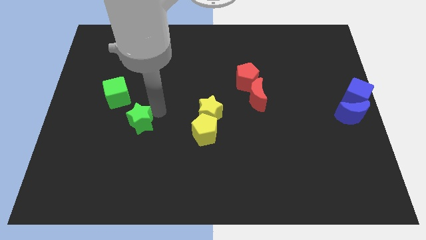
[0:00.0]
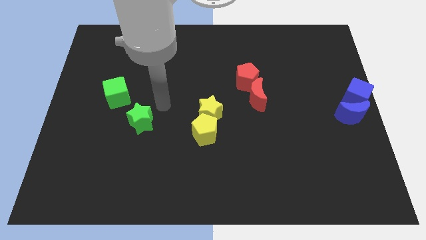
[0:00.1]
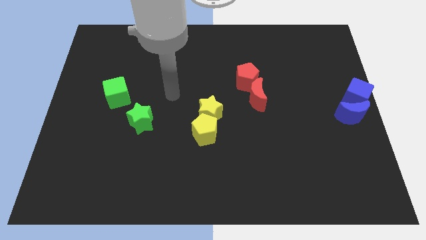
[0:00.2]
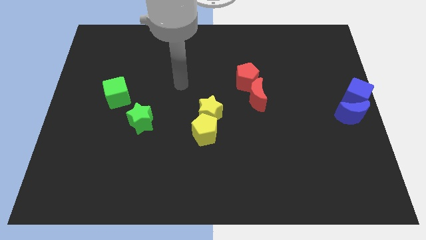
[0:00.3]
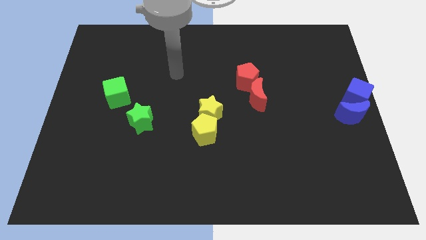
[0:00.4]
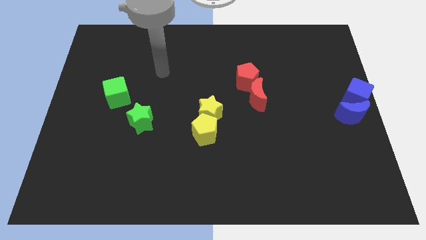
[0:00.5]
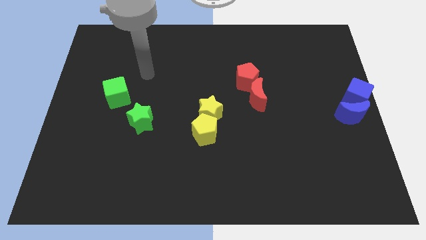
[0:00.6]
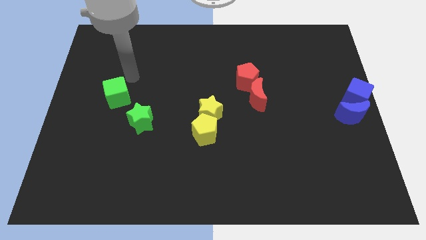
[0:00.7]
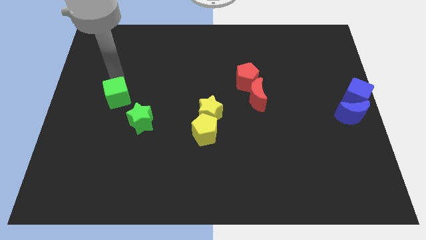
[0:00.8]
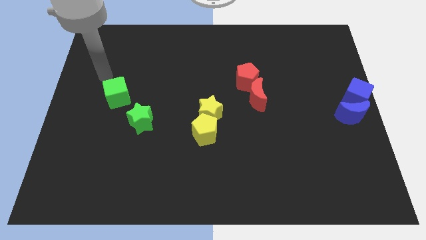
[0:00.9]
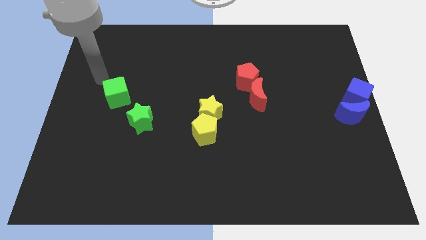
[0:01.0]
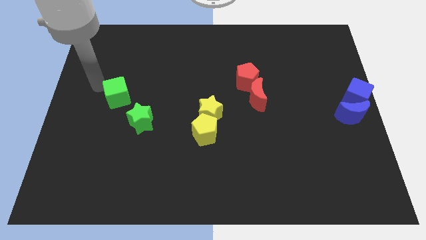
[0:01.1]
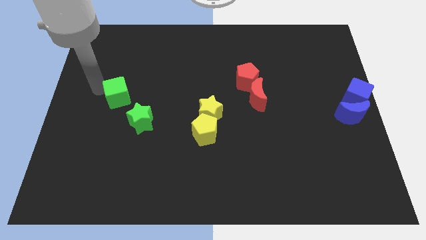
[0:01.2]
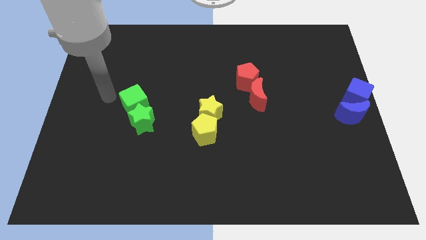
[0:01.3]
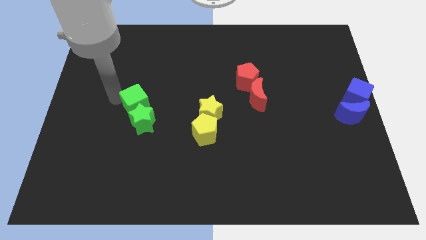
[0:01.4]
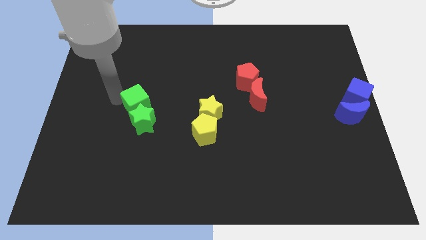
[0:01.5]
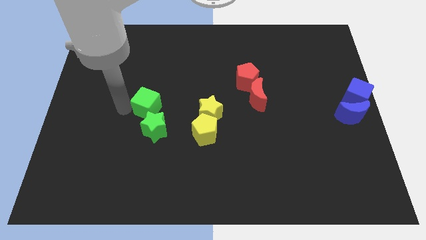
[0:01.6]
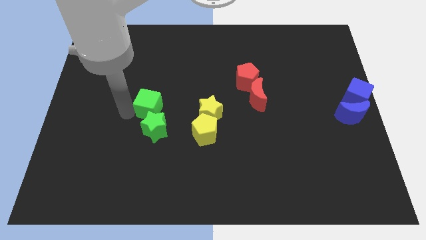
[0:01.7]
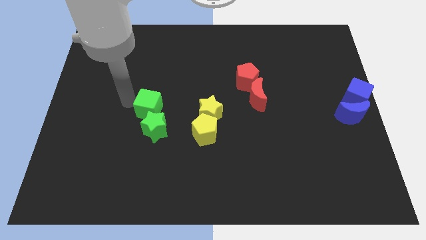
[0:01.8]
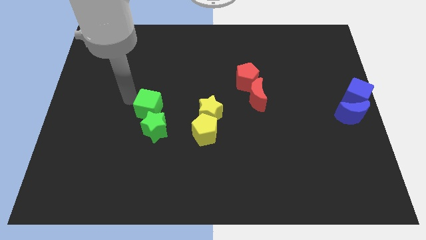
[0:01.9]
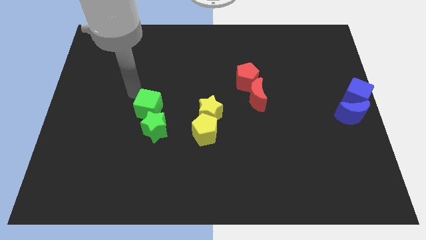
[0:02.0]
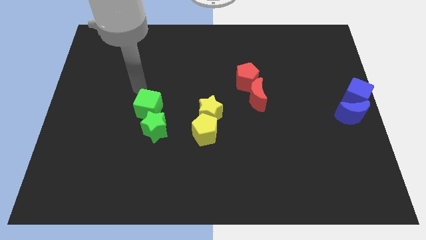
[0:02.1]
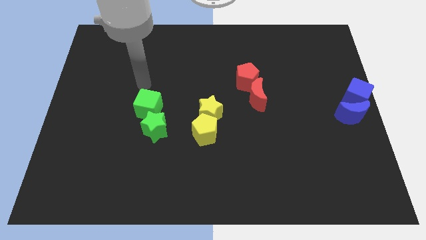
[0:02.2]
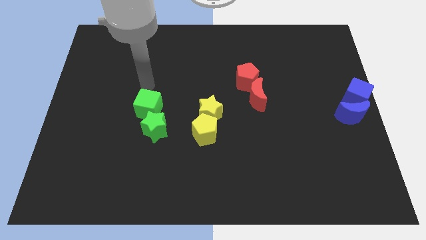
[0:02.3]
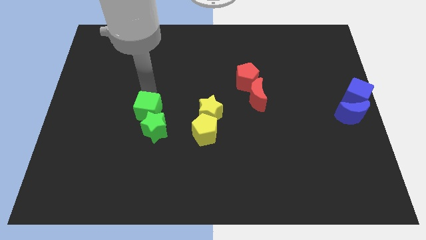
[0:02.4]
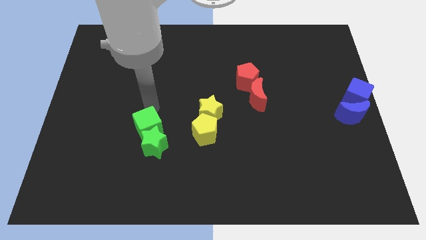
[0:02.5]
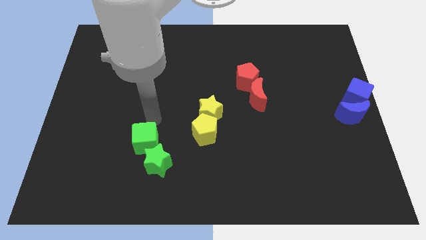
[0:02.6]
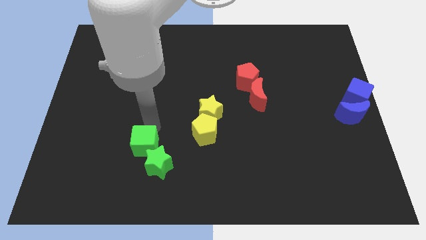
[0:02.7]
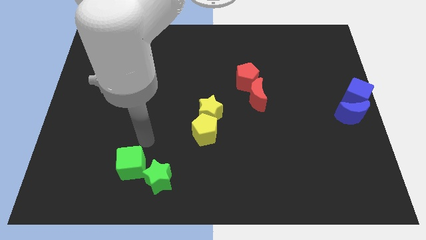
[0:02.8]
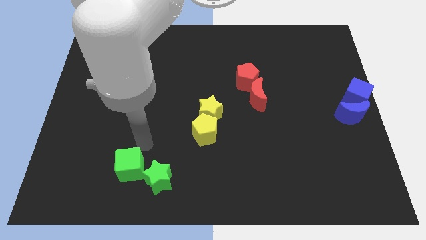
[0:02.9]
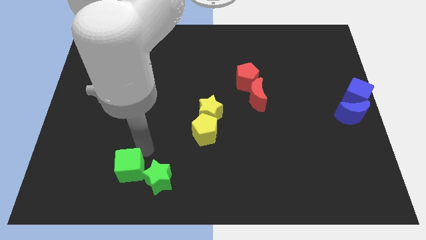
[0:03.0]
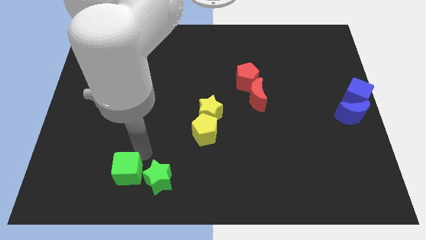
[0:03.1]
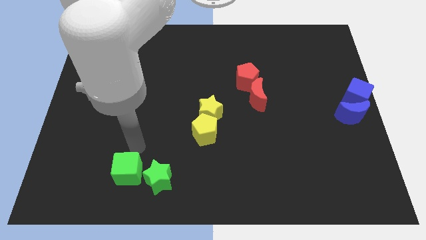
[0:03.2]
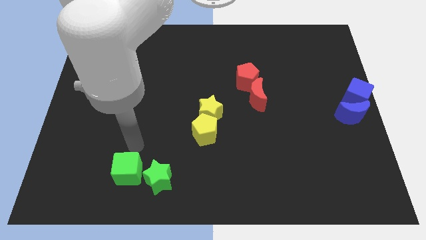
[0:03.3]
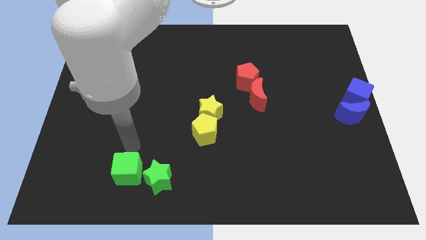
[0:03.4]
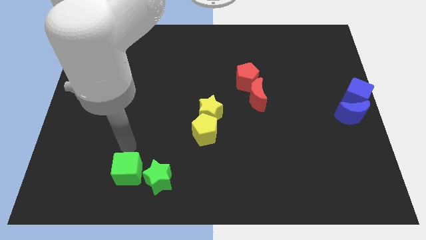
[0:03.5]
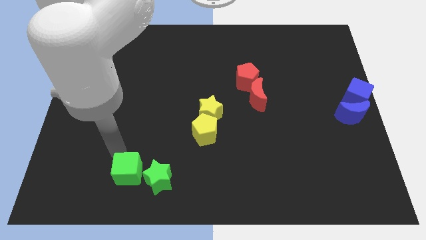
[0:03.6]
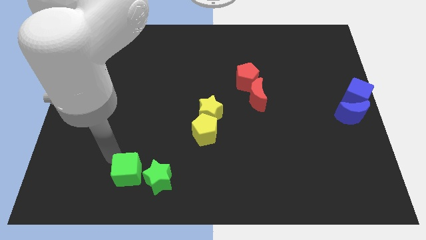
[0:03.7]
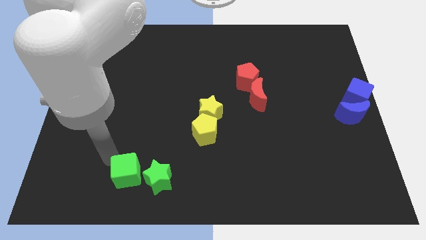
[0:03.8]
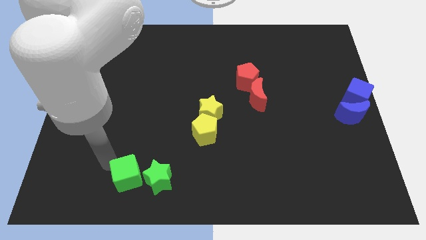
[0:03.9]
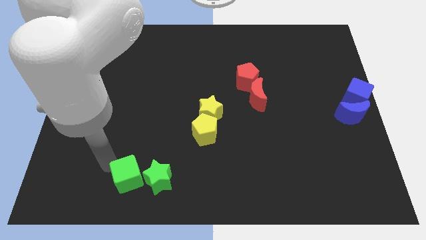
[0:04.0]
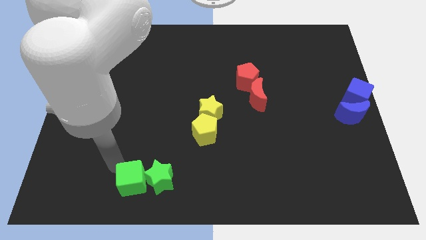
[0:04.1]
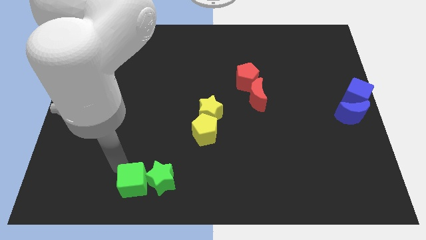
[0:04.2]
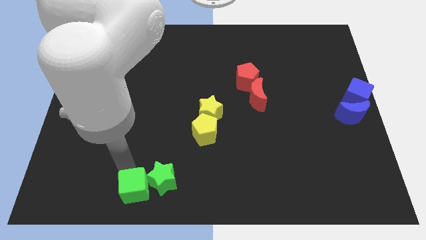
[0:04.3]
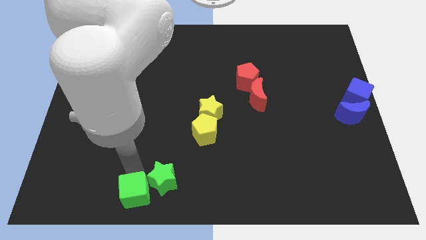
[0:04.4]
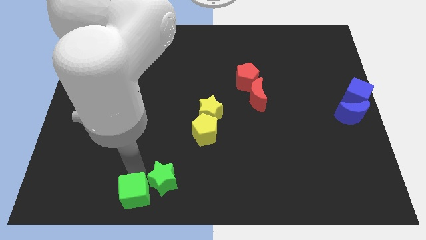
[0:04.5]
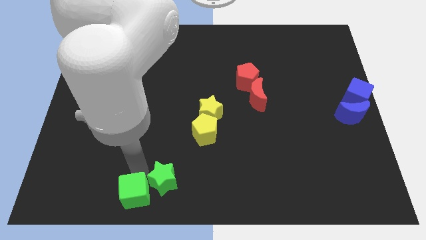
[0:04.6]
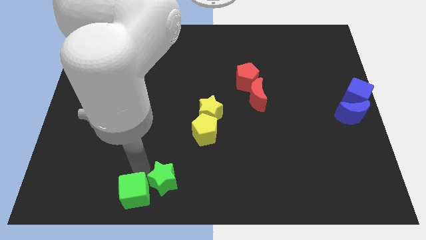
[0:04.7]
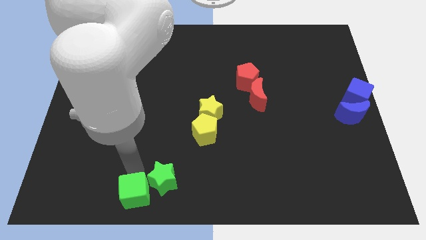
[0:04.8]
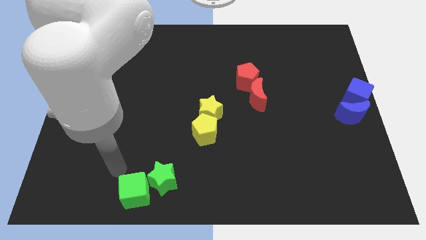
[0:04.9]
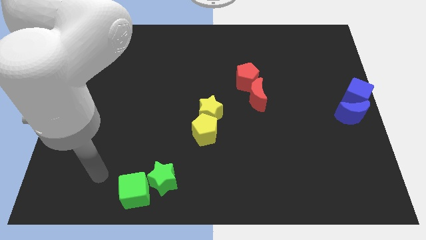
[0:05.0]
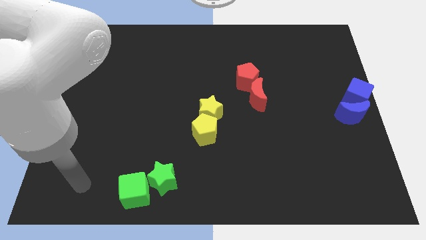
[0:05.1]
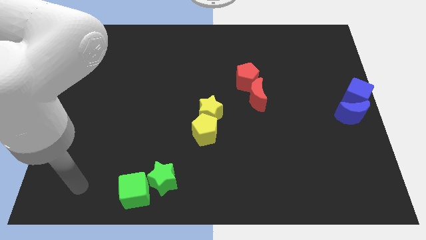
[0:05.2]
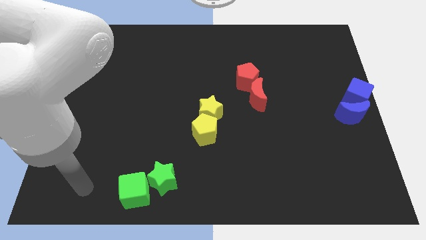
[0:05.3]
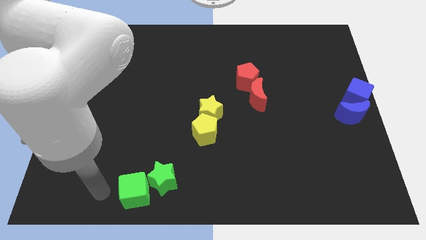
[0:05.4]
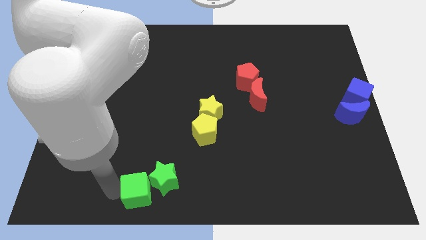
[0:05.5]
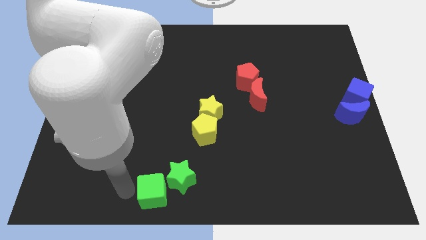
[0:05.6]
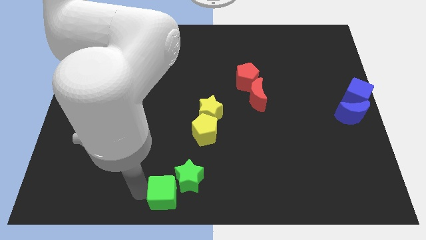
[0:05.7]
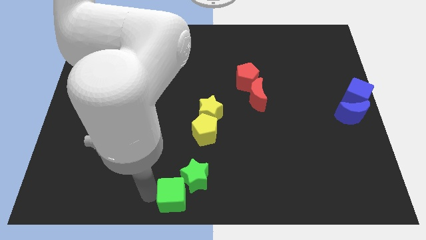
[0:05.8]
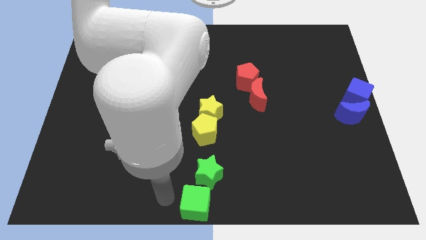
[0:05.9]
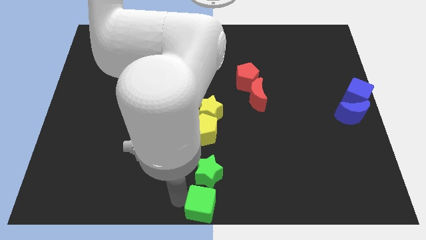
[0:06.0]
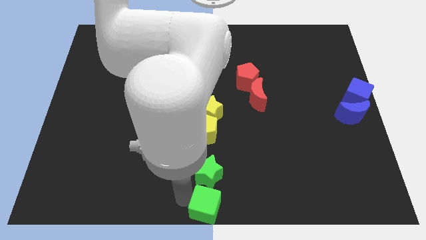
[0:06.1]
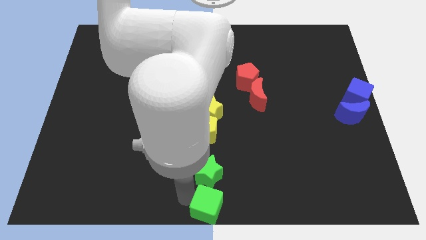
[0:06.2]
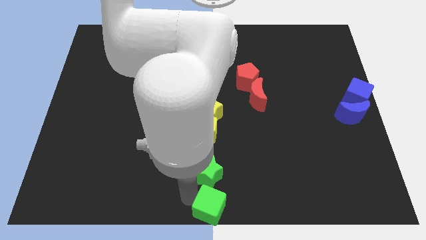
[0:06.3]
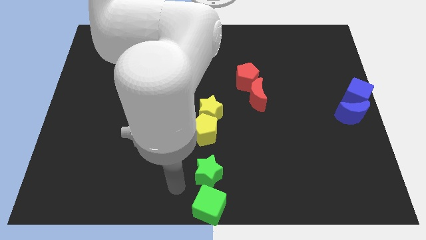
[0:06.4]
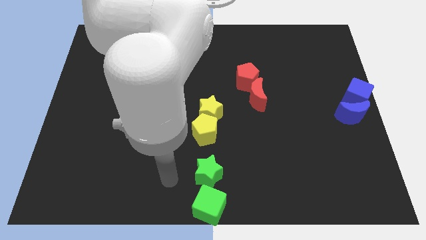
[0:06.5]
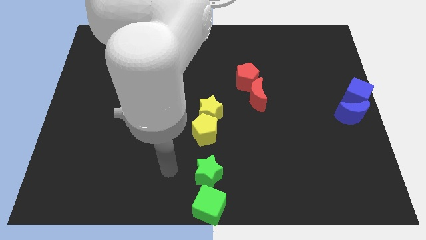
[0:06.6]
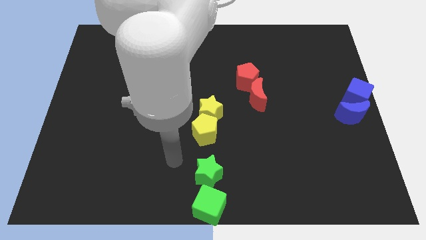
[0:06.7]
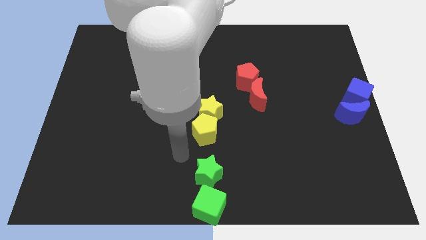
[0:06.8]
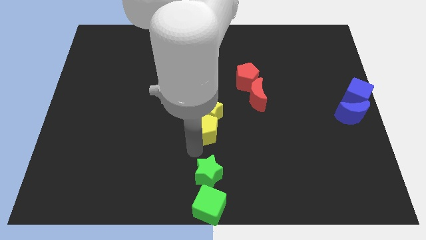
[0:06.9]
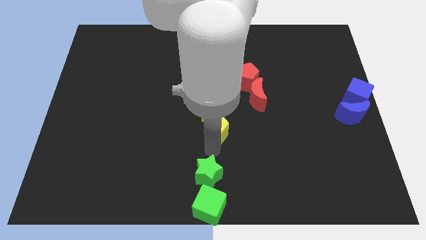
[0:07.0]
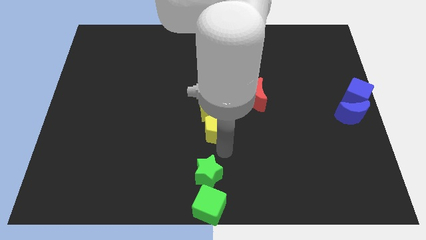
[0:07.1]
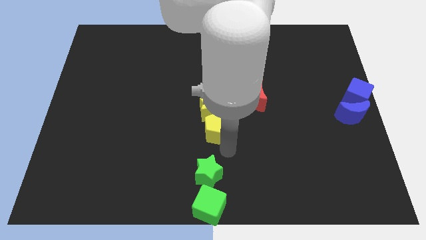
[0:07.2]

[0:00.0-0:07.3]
move the green star and the green cube towards the bottom center of the board

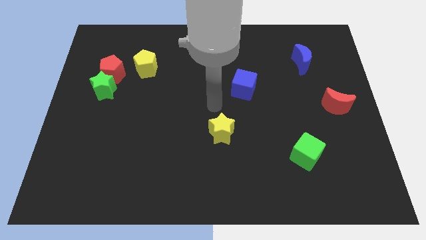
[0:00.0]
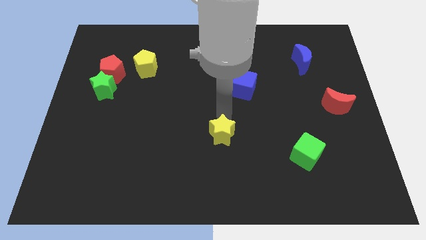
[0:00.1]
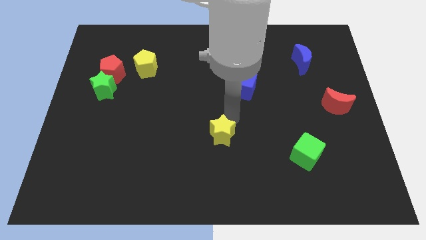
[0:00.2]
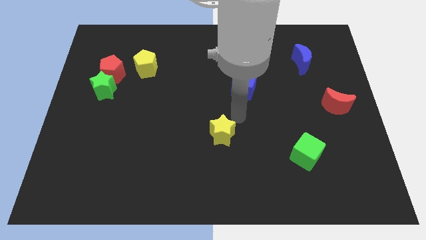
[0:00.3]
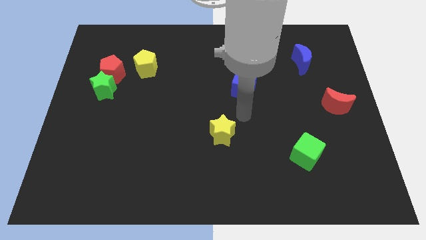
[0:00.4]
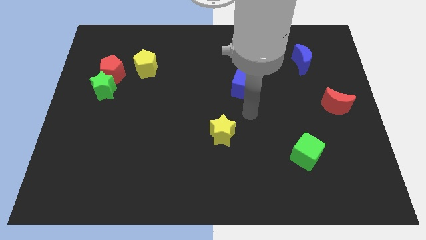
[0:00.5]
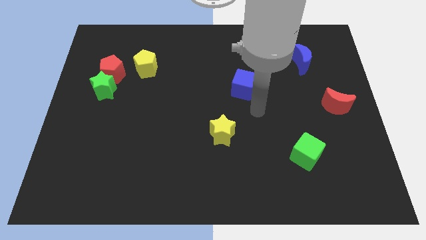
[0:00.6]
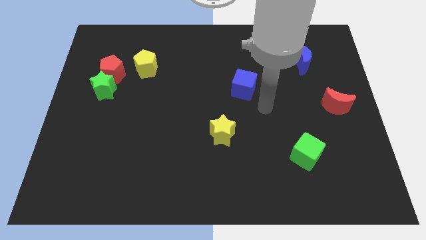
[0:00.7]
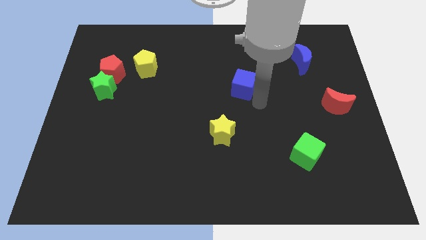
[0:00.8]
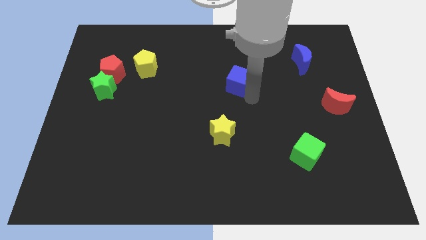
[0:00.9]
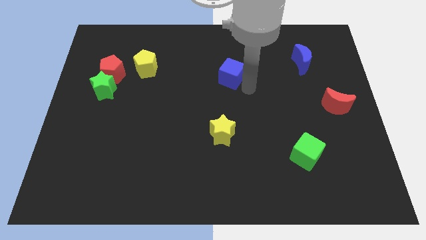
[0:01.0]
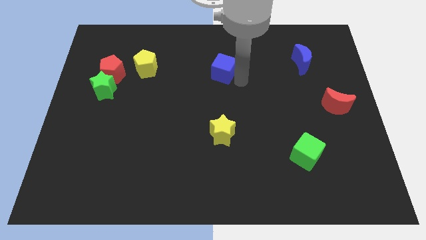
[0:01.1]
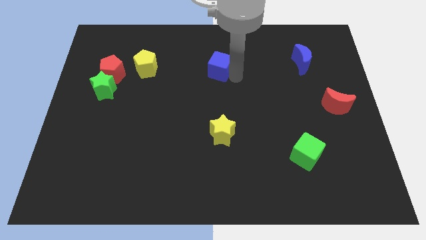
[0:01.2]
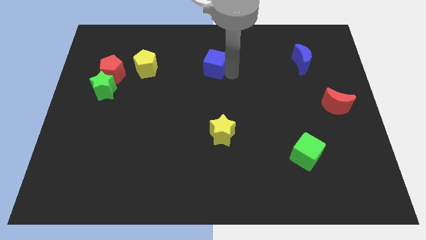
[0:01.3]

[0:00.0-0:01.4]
push blue cube above yellow star

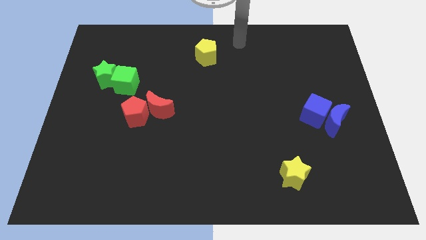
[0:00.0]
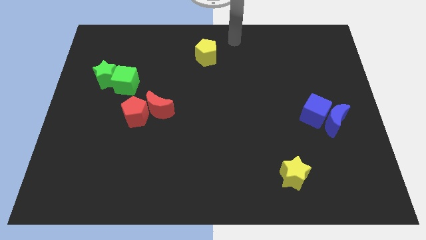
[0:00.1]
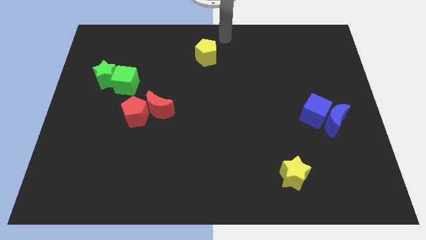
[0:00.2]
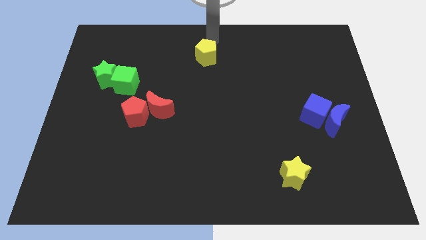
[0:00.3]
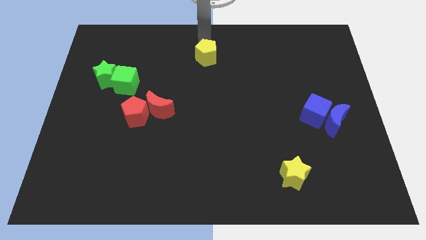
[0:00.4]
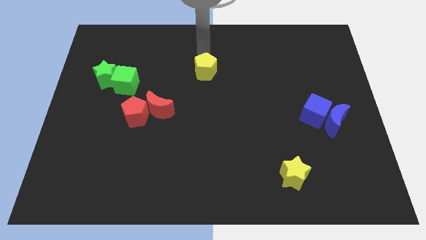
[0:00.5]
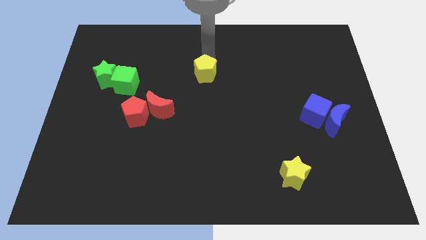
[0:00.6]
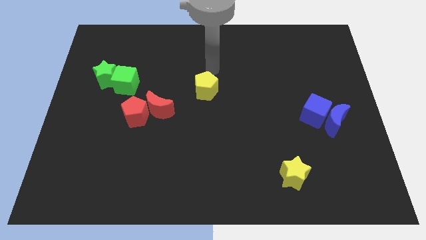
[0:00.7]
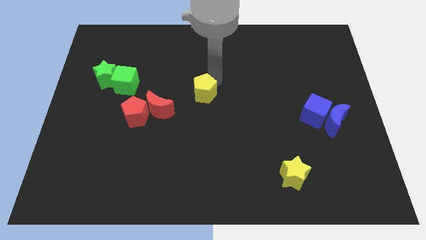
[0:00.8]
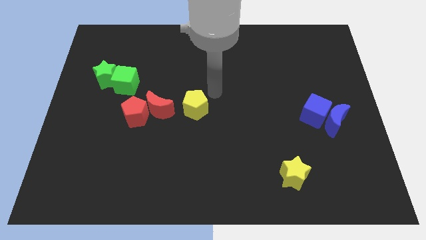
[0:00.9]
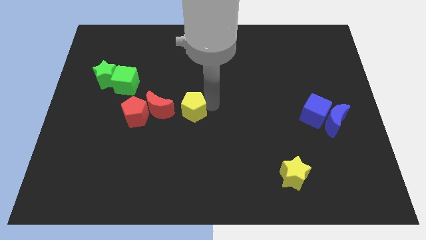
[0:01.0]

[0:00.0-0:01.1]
push the yellow pentagon to the right of the red crescent
